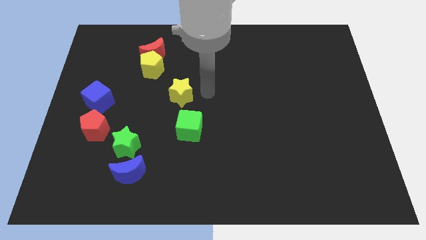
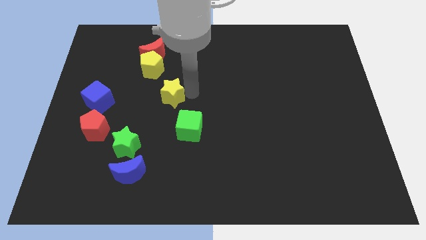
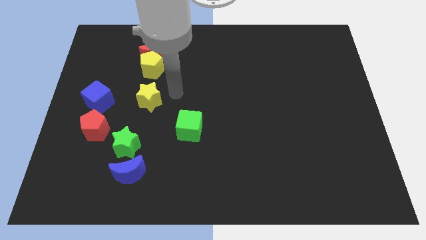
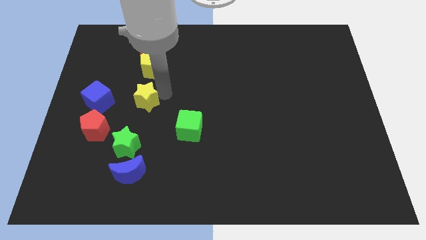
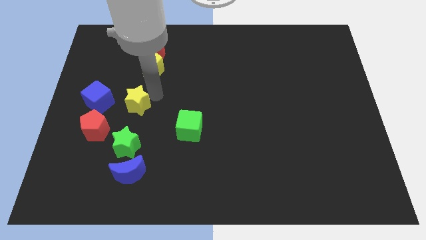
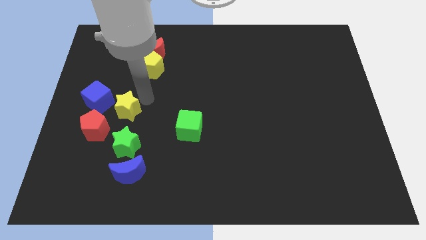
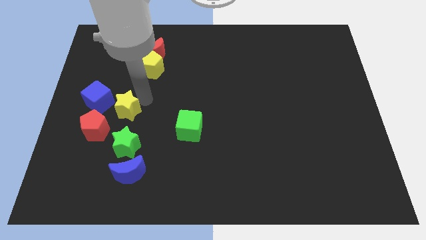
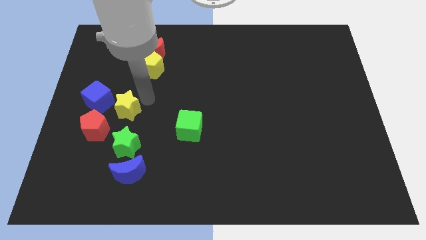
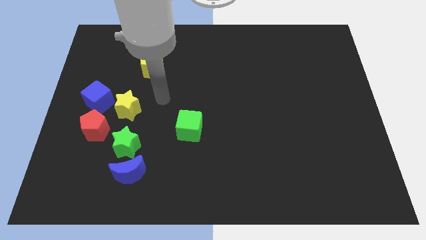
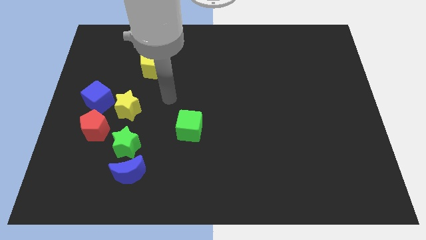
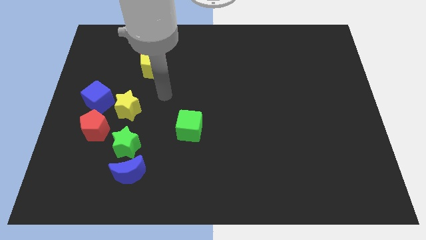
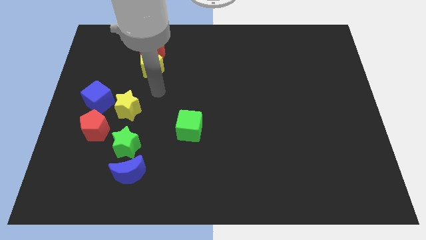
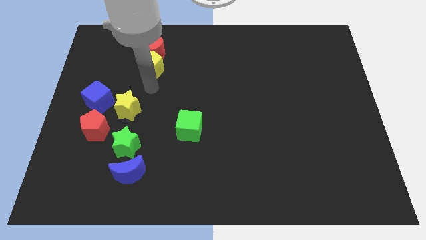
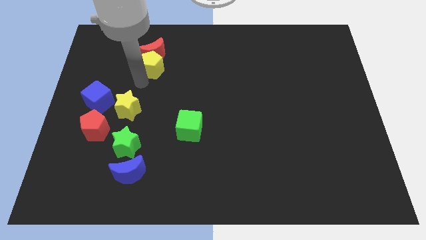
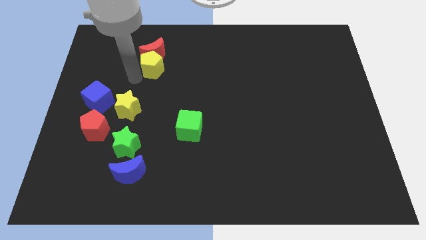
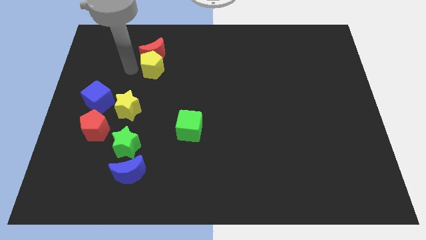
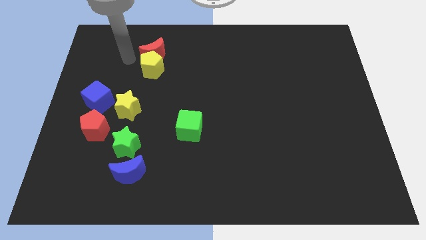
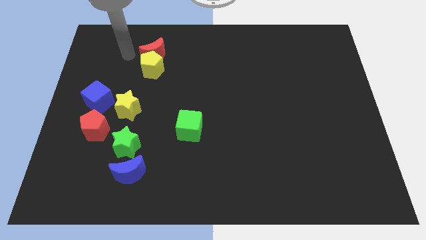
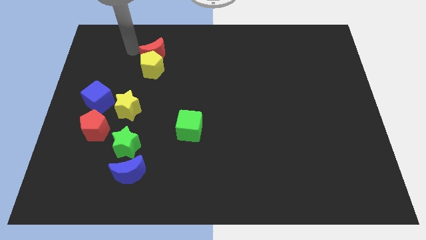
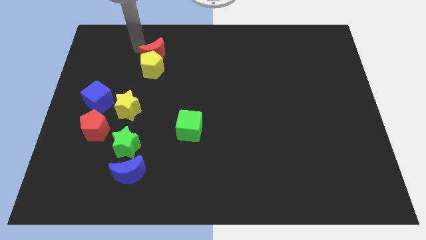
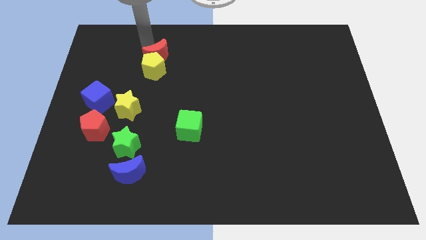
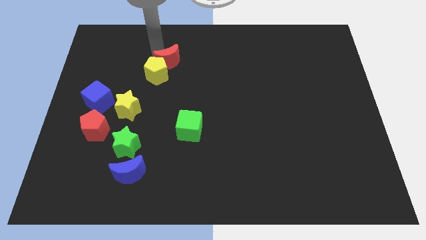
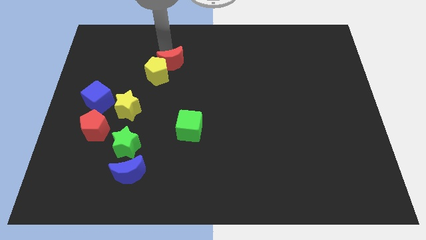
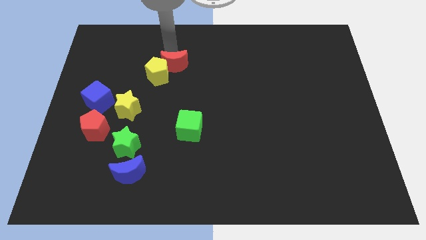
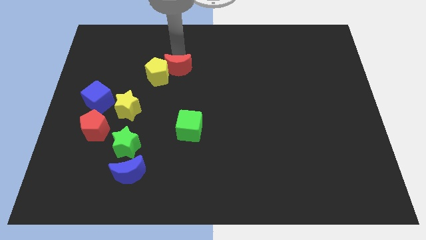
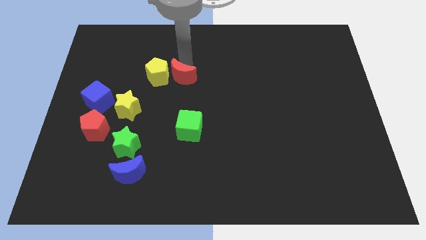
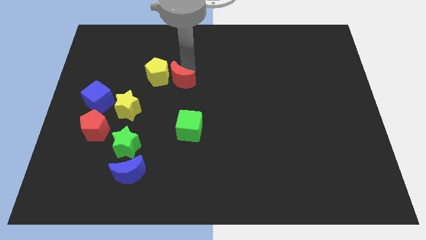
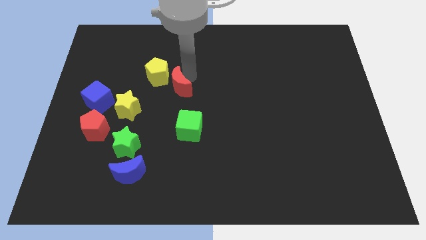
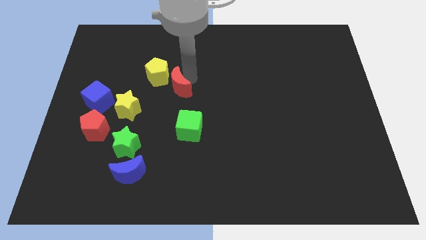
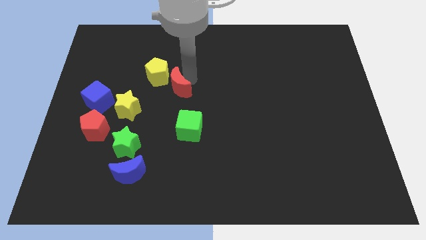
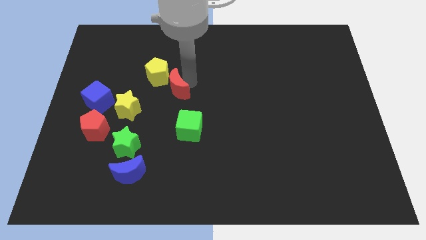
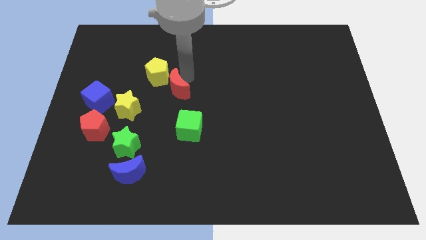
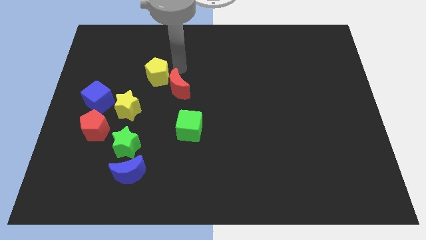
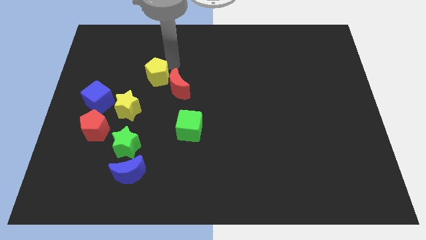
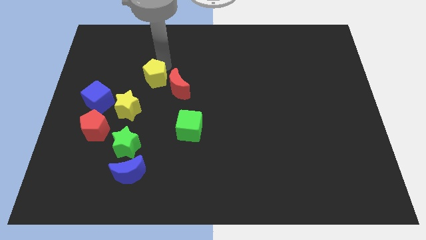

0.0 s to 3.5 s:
push the red crescent above to the green cube

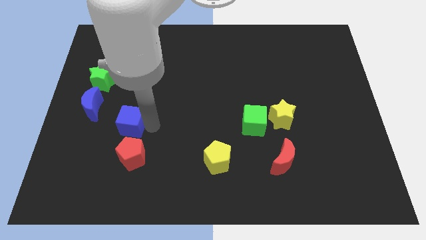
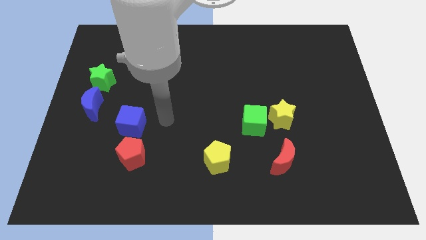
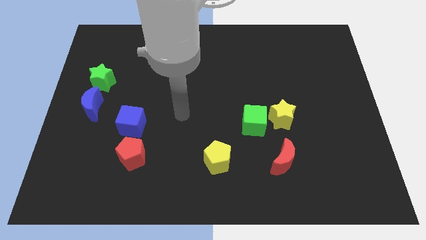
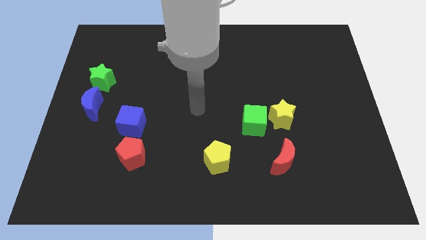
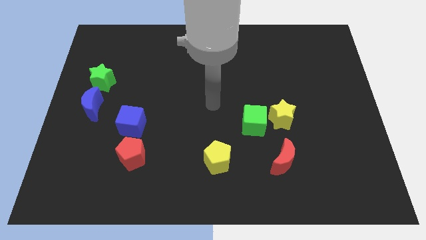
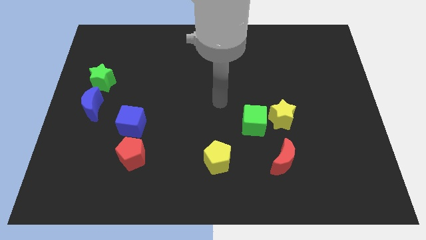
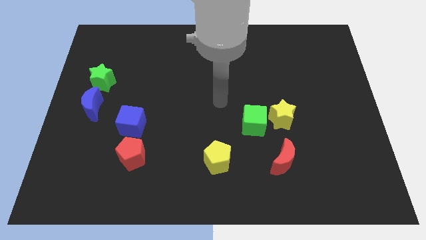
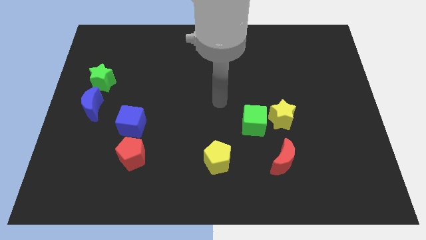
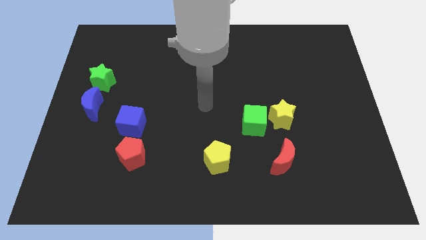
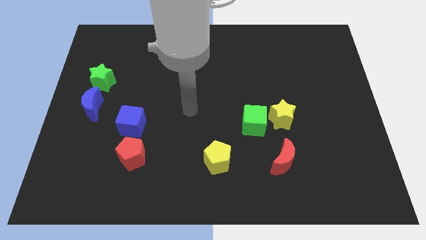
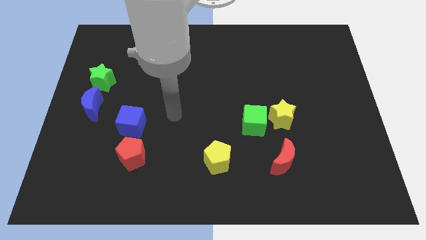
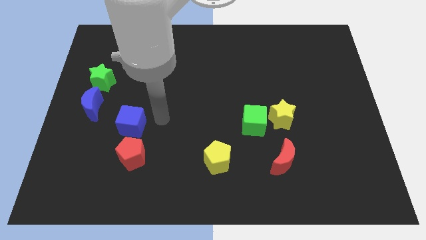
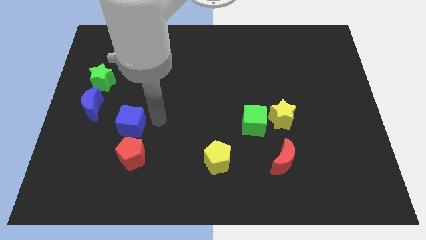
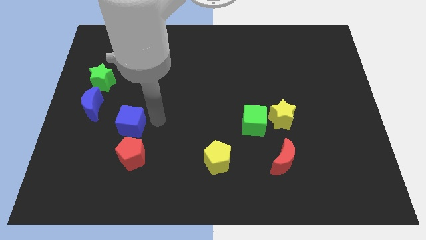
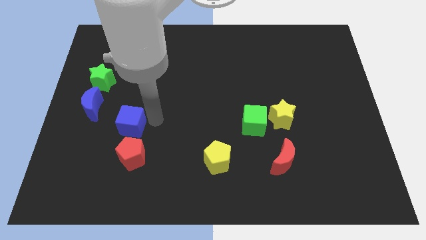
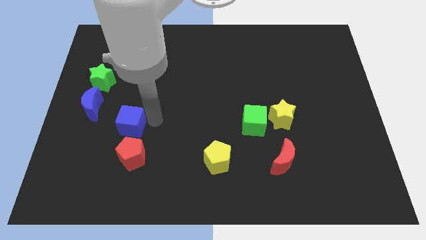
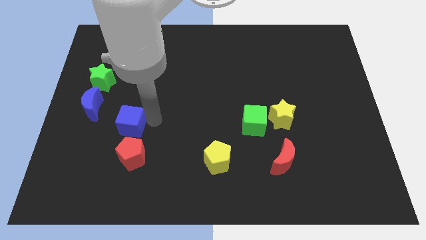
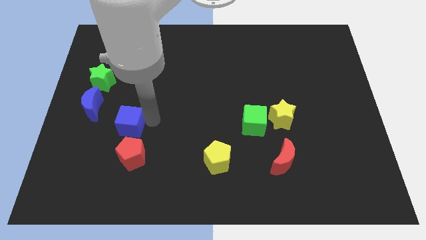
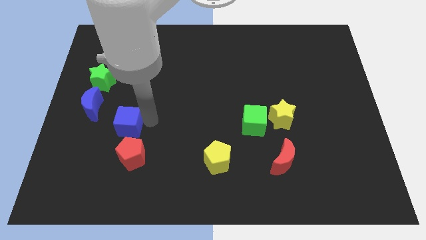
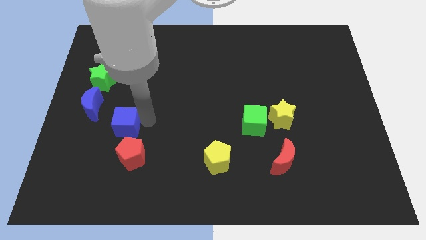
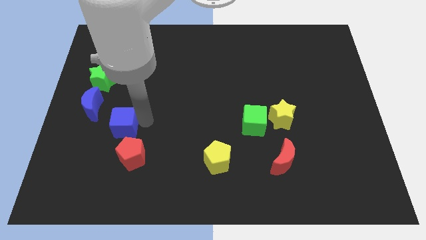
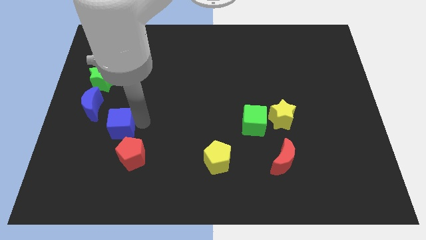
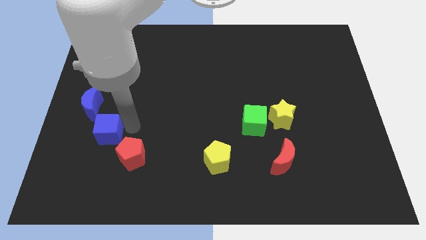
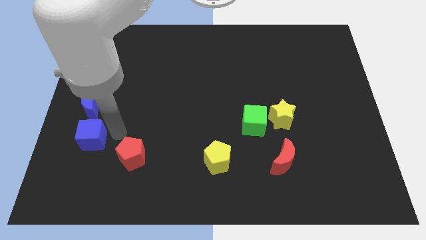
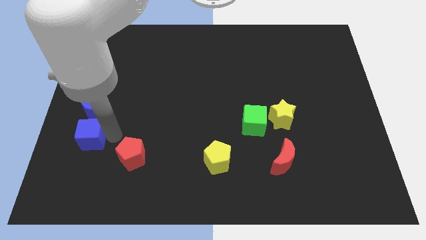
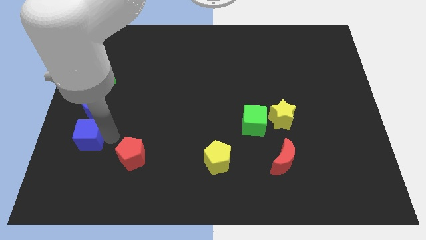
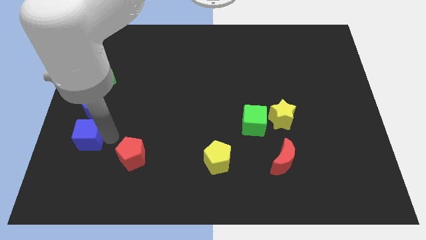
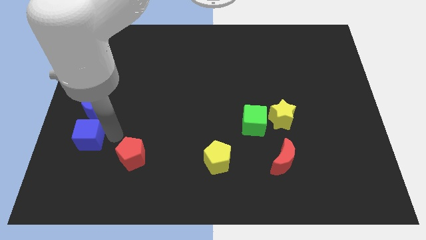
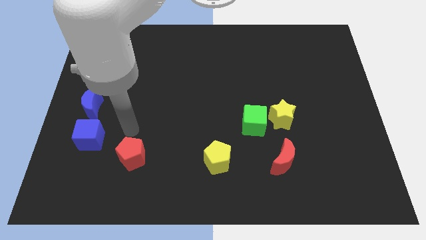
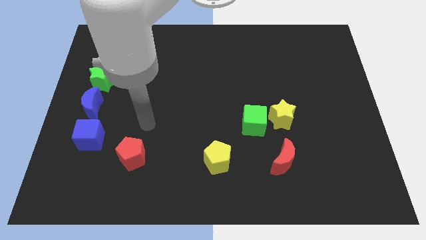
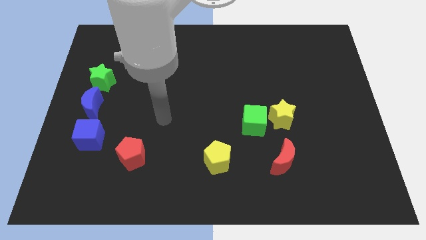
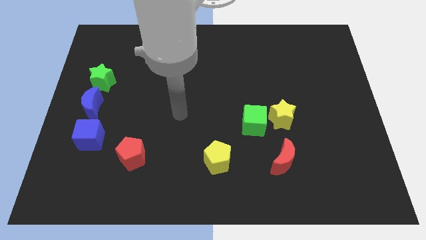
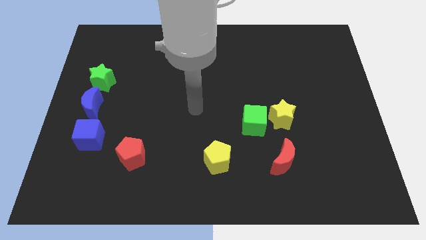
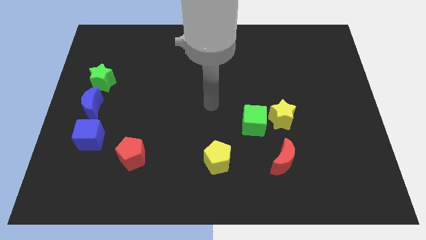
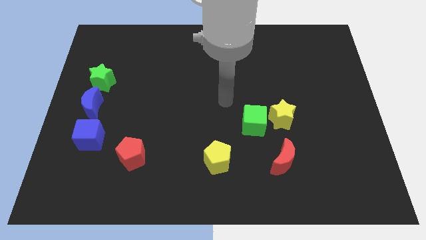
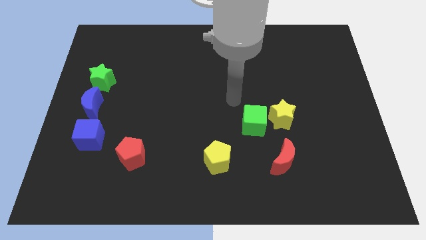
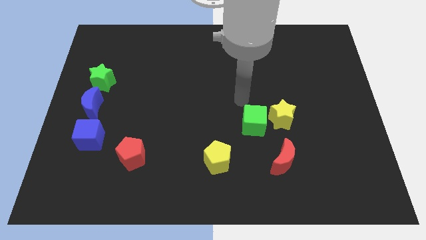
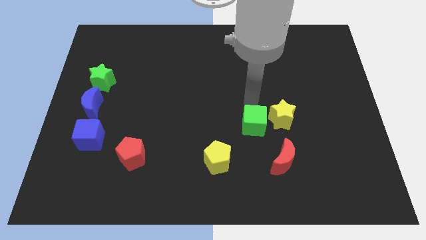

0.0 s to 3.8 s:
put the blue cube vertically below the blue moon

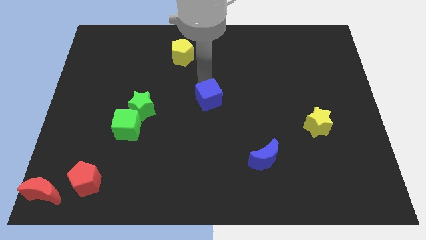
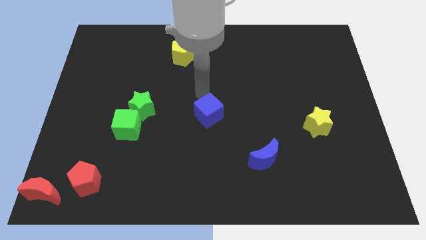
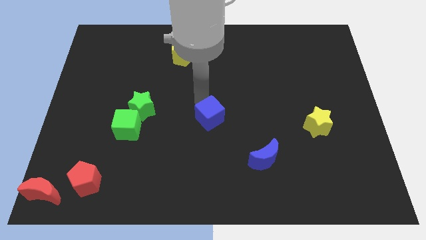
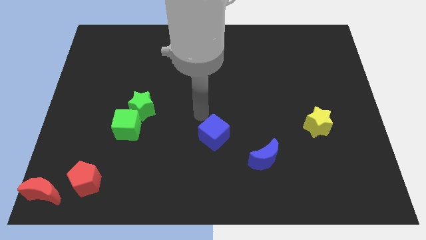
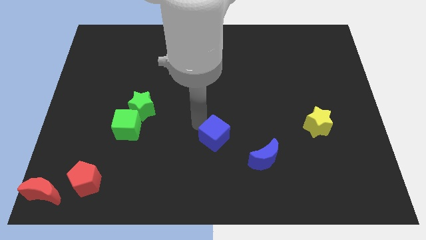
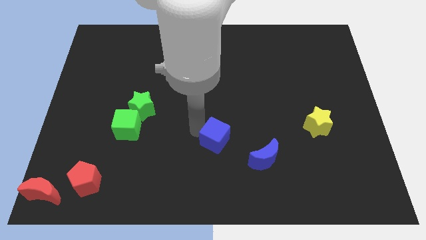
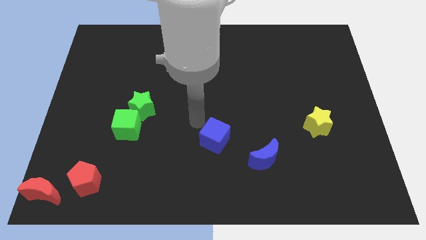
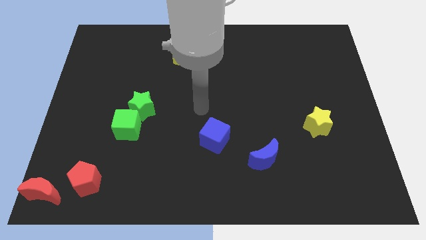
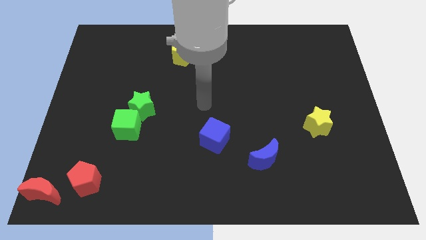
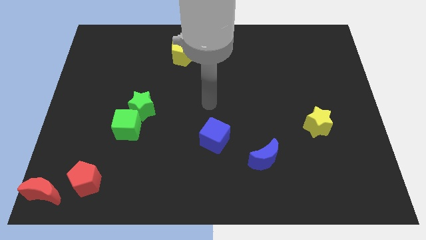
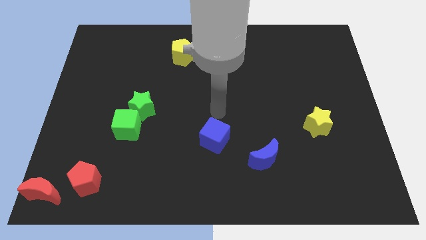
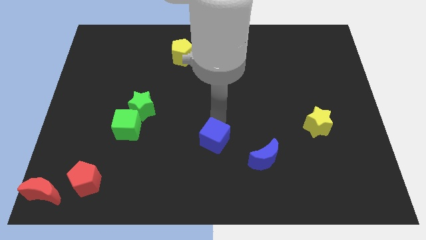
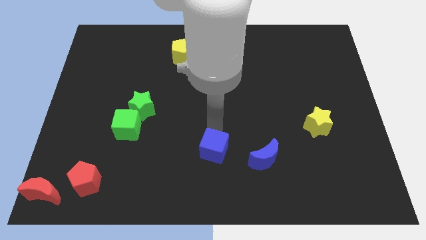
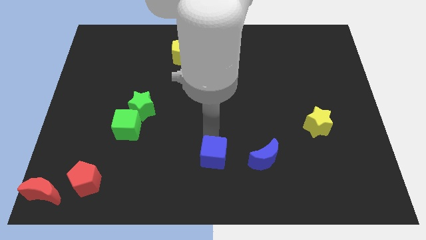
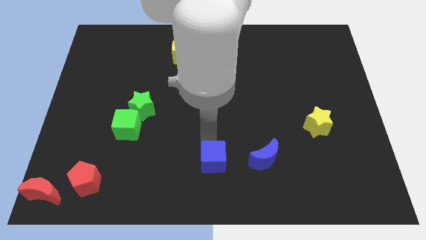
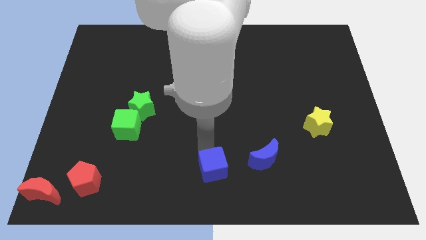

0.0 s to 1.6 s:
place the blue cube left to the blue moon

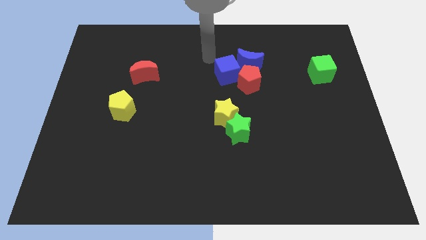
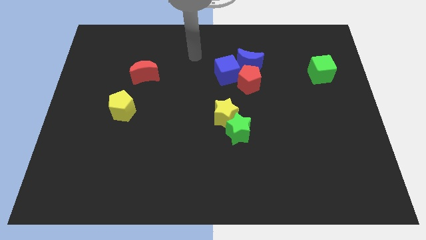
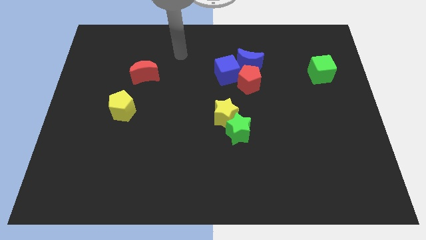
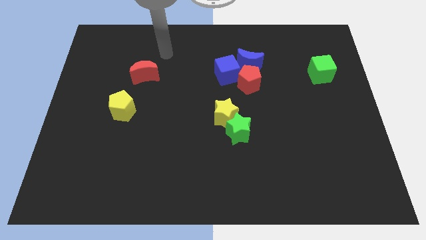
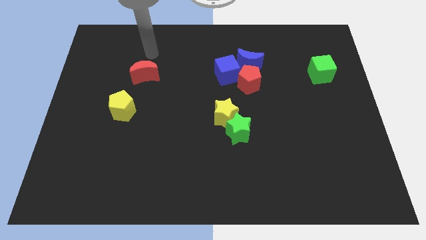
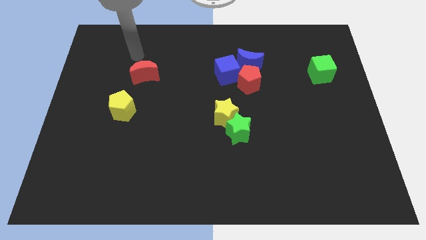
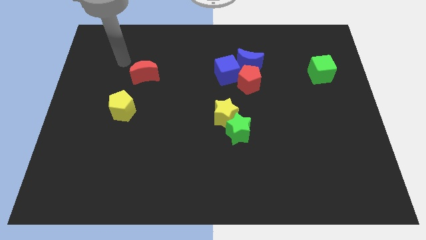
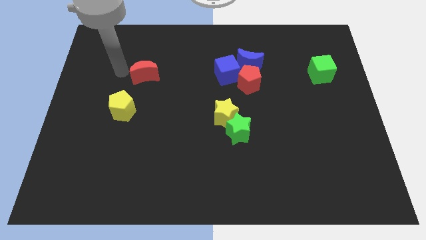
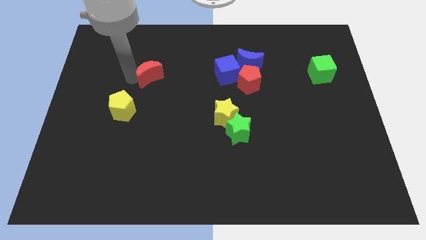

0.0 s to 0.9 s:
place your arm to the left side of red moon
